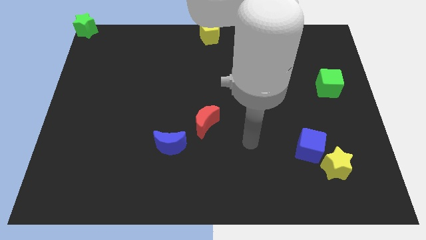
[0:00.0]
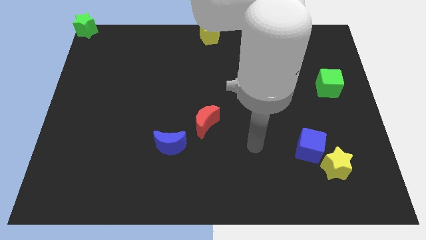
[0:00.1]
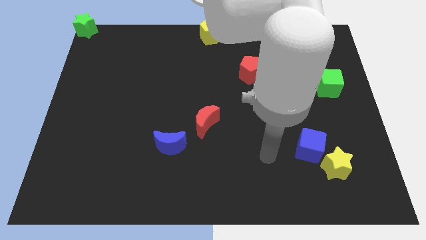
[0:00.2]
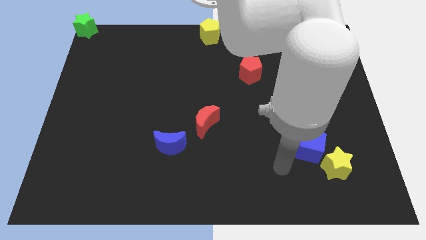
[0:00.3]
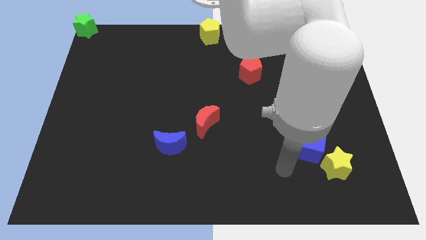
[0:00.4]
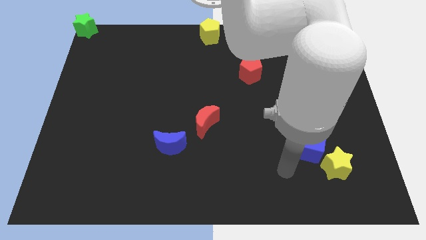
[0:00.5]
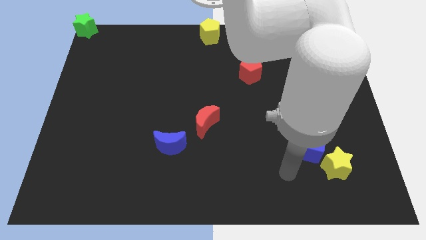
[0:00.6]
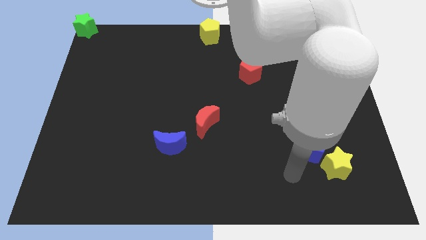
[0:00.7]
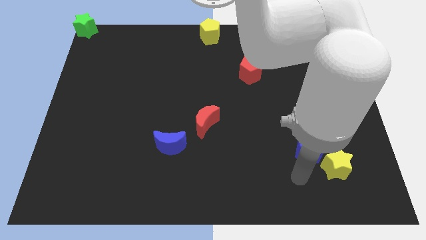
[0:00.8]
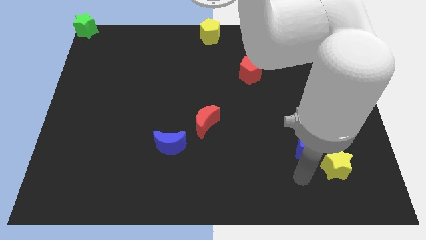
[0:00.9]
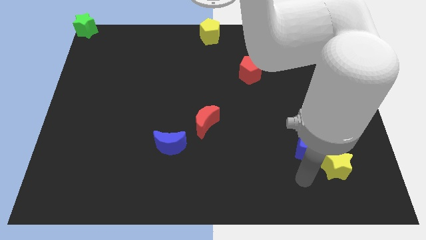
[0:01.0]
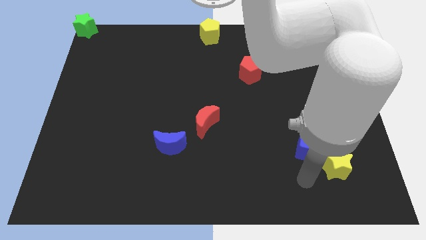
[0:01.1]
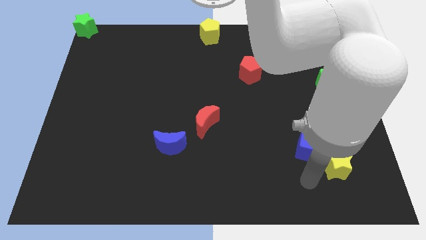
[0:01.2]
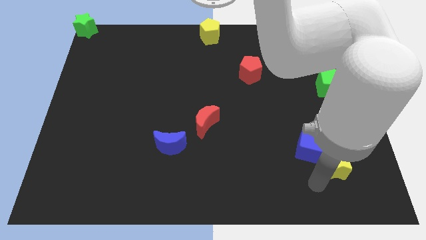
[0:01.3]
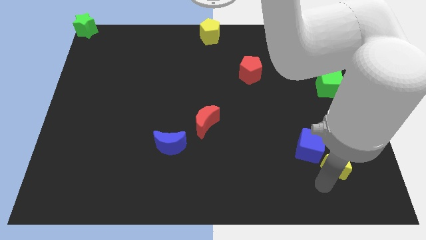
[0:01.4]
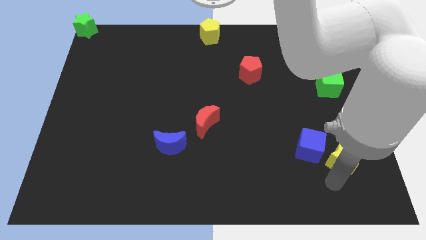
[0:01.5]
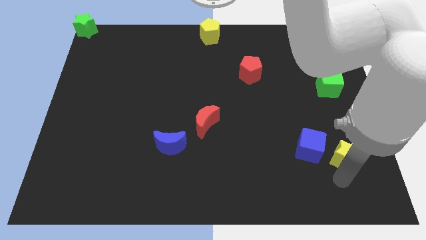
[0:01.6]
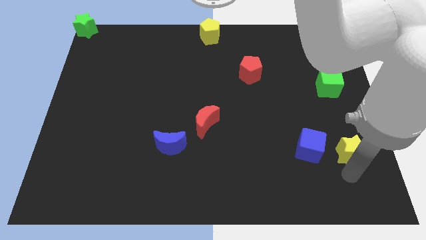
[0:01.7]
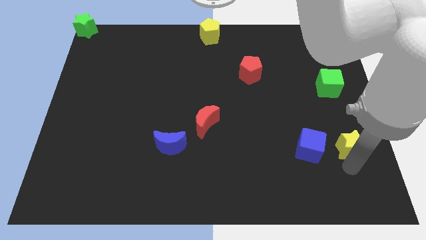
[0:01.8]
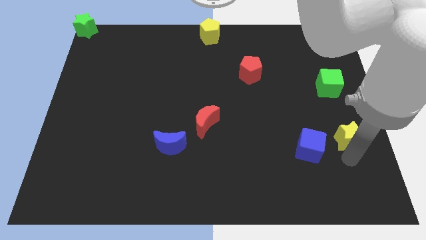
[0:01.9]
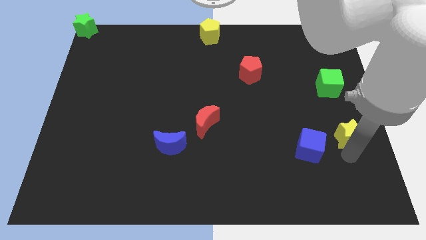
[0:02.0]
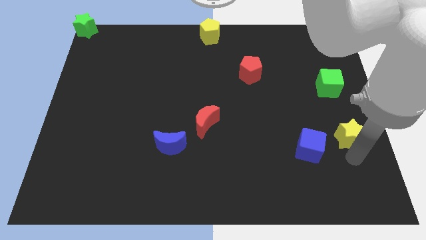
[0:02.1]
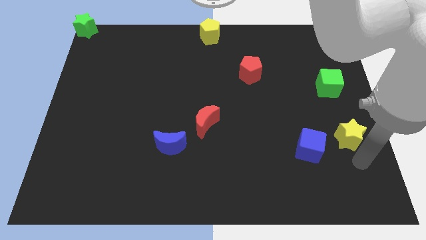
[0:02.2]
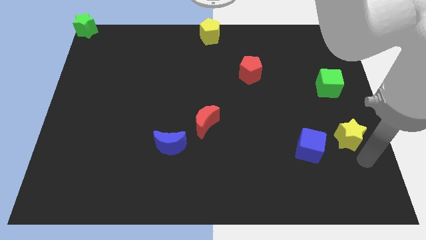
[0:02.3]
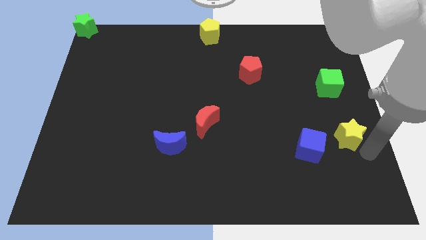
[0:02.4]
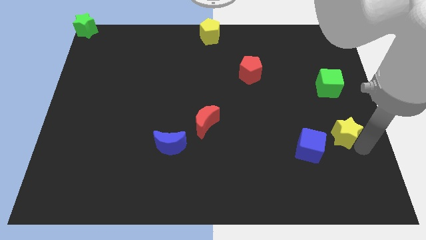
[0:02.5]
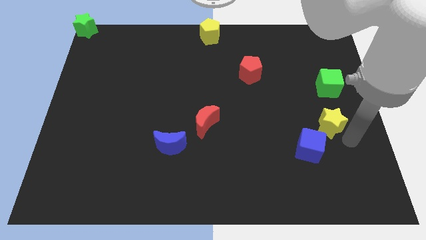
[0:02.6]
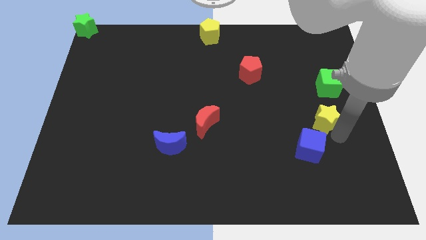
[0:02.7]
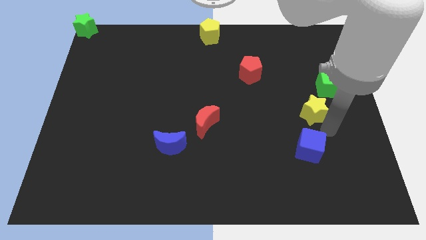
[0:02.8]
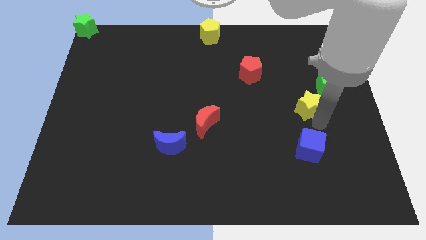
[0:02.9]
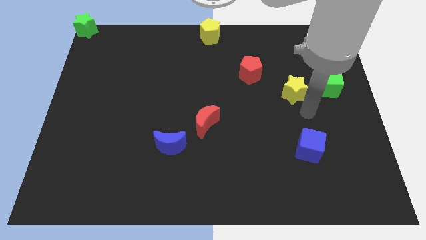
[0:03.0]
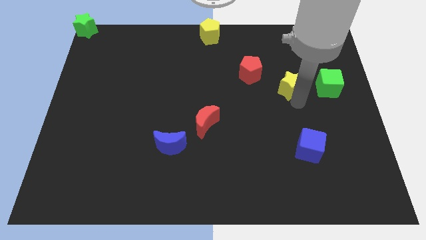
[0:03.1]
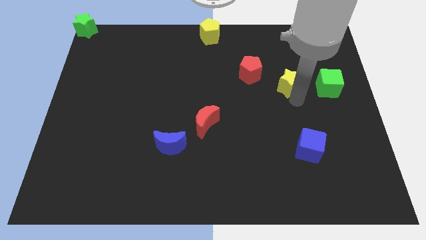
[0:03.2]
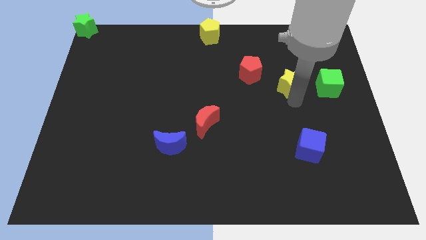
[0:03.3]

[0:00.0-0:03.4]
separate yellow star and blue cube

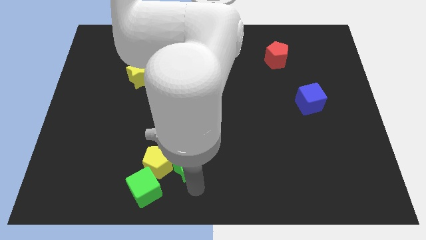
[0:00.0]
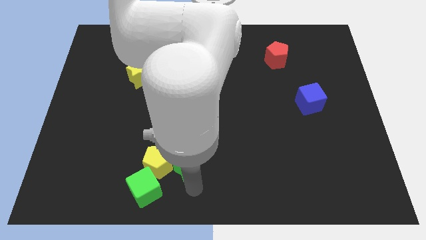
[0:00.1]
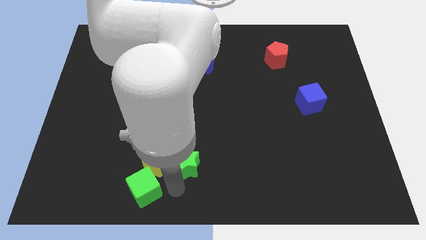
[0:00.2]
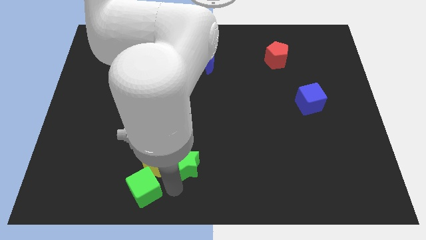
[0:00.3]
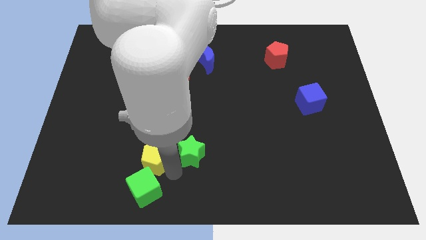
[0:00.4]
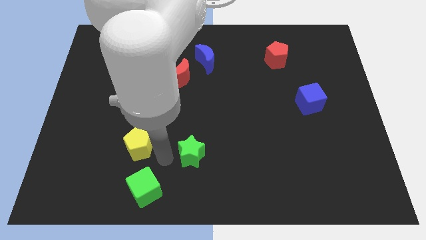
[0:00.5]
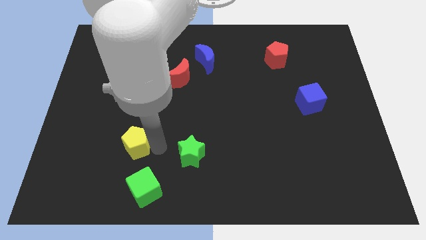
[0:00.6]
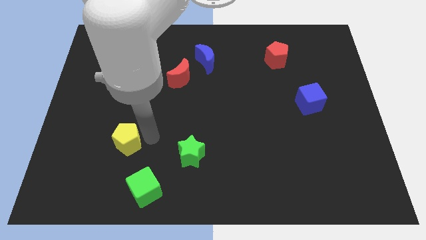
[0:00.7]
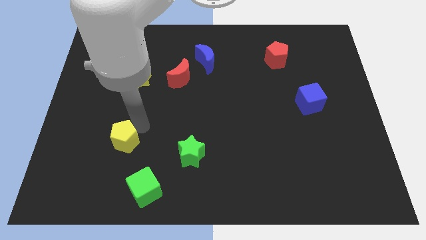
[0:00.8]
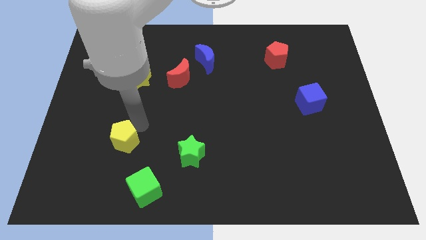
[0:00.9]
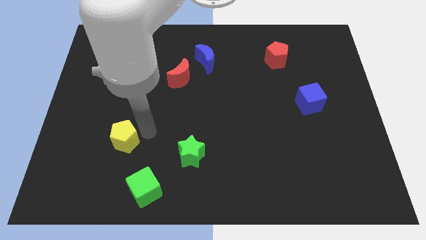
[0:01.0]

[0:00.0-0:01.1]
separate the yellow pentagon away from the green blocks

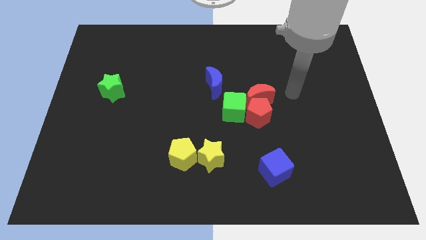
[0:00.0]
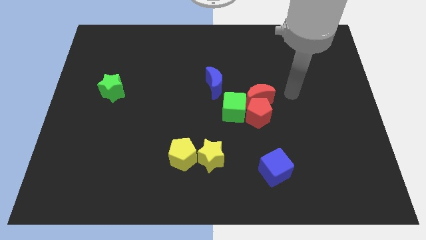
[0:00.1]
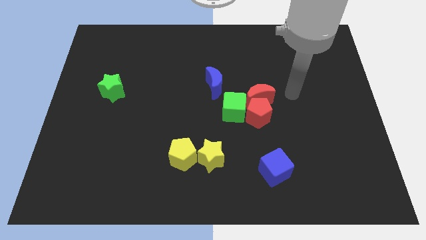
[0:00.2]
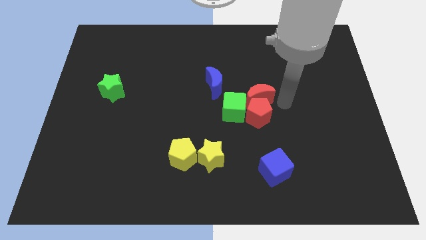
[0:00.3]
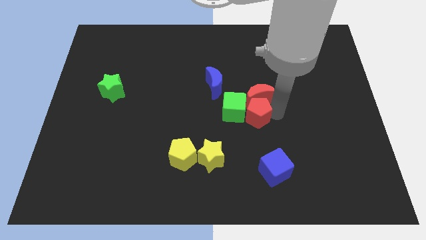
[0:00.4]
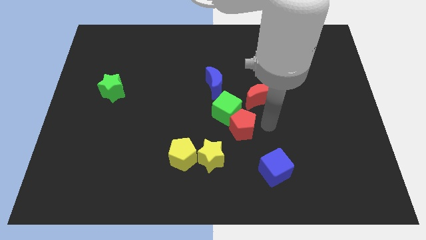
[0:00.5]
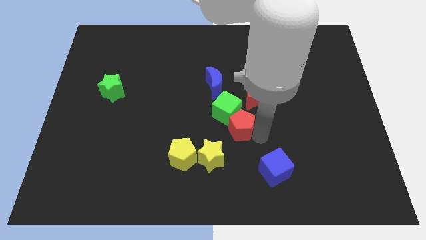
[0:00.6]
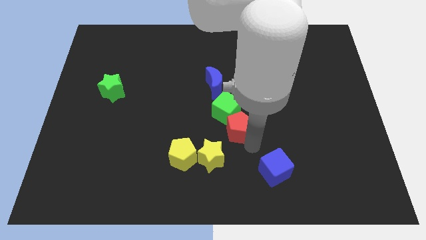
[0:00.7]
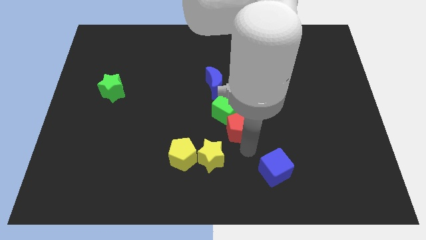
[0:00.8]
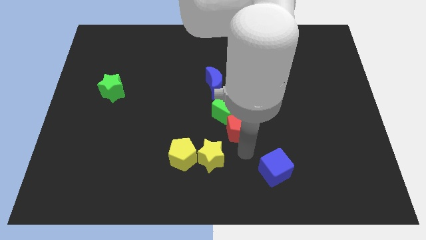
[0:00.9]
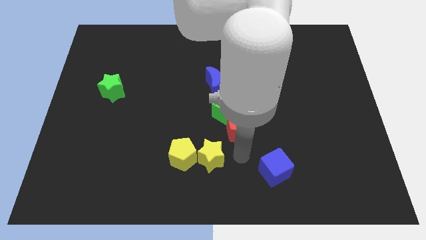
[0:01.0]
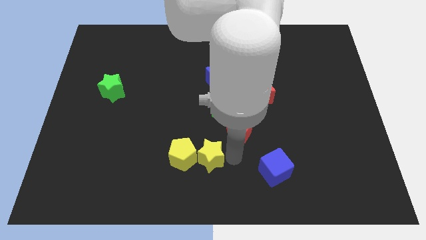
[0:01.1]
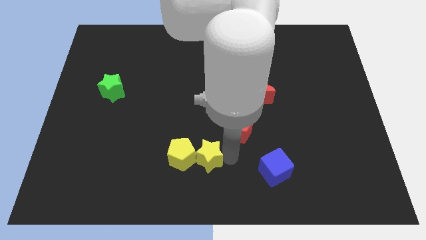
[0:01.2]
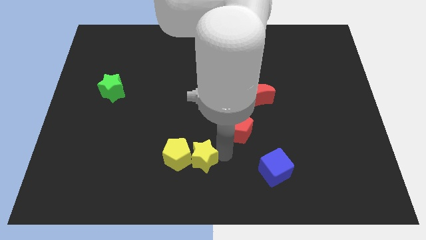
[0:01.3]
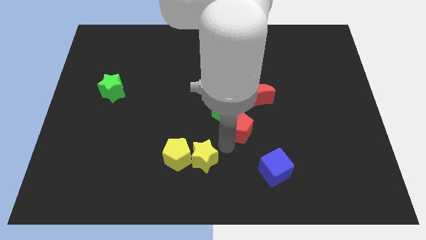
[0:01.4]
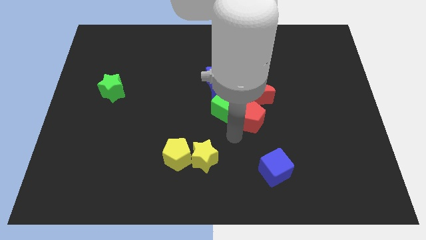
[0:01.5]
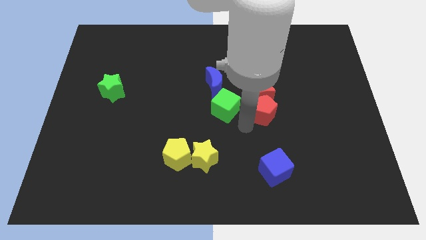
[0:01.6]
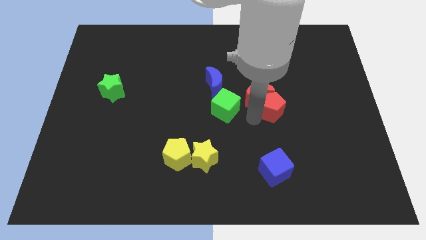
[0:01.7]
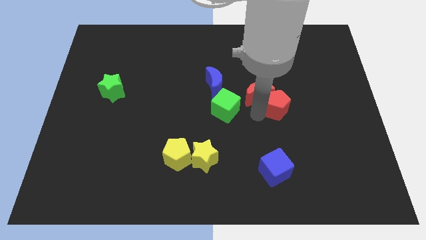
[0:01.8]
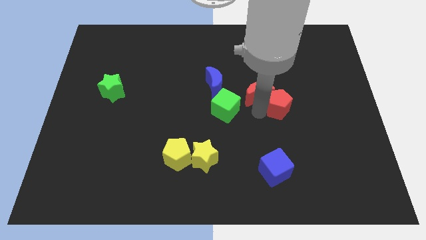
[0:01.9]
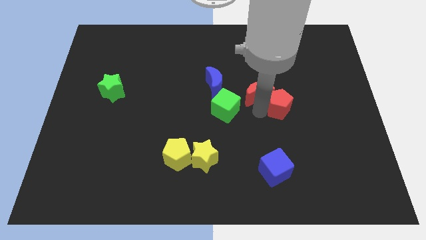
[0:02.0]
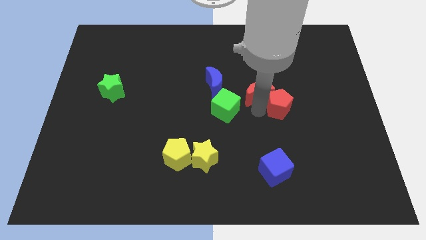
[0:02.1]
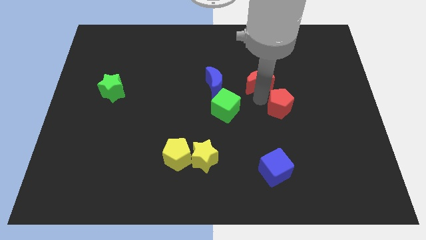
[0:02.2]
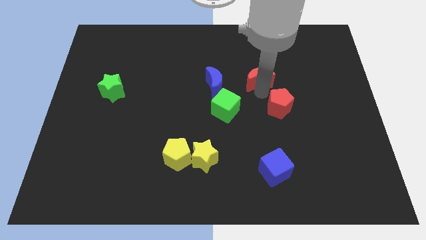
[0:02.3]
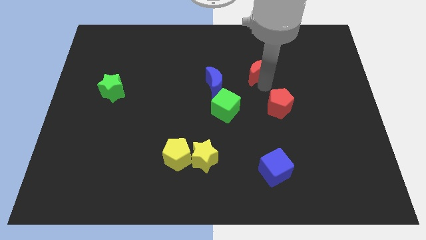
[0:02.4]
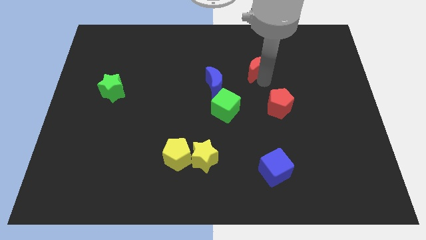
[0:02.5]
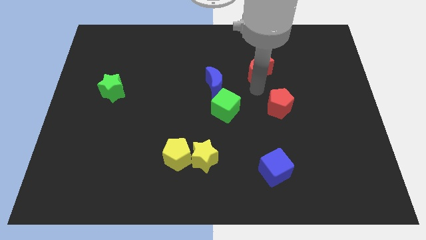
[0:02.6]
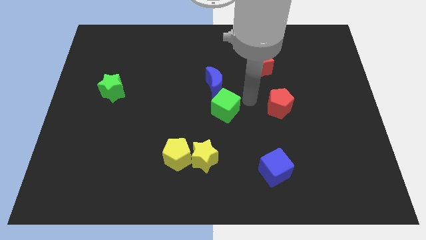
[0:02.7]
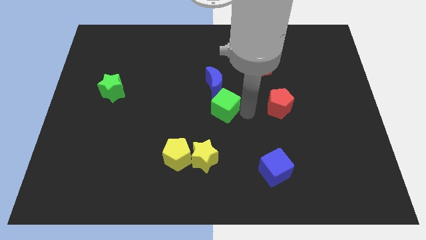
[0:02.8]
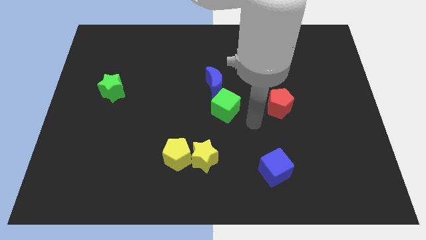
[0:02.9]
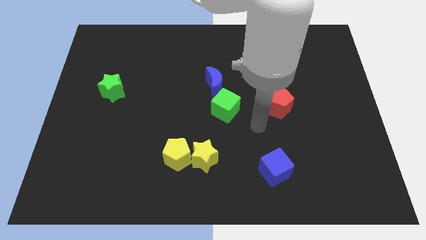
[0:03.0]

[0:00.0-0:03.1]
separate red blocks from green cube

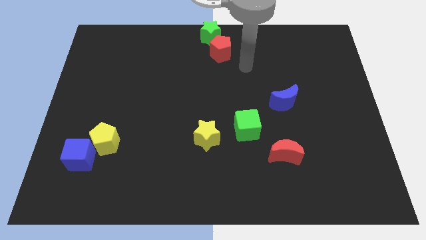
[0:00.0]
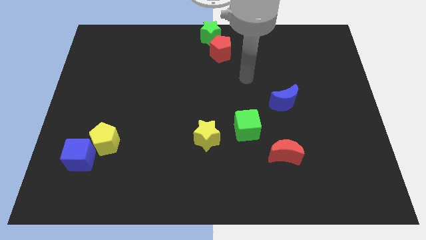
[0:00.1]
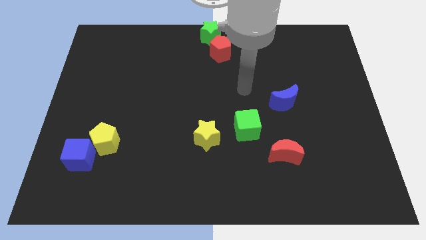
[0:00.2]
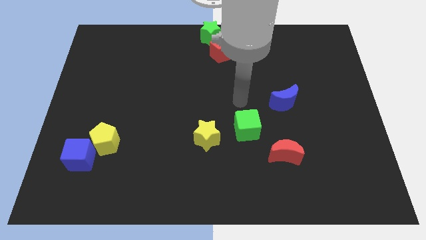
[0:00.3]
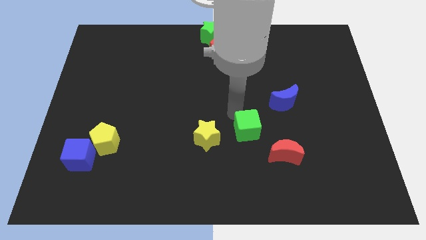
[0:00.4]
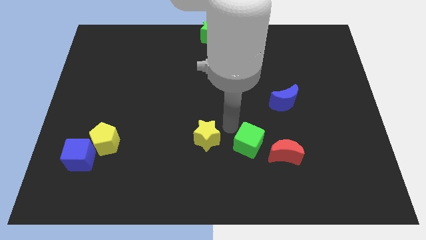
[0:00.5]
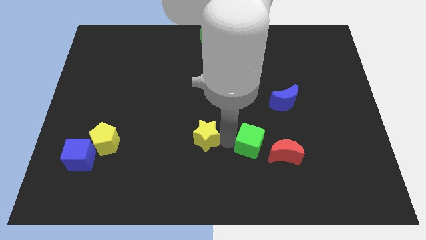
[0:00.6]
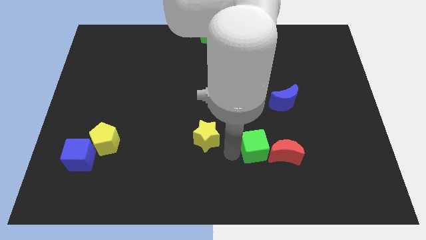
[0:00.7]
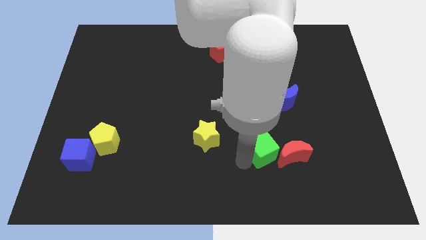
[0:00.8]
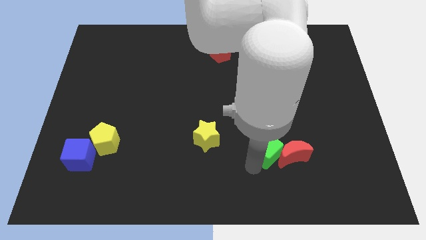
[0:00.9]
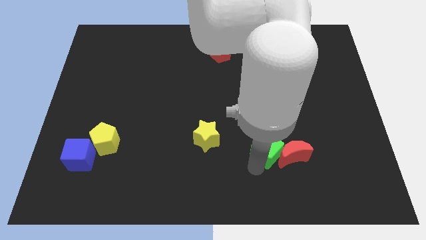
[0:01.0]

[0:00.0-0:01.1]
move your arm bottom of the green cube

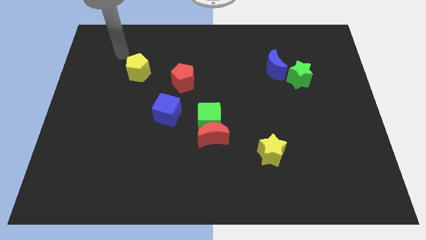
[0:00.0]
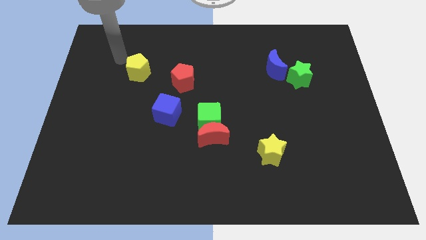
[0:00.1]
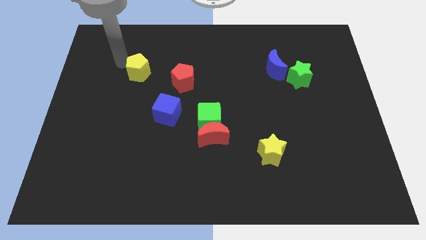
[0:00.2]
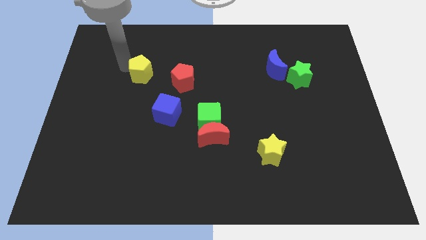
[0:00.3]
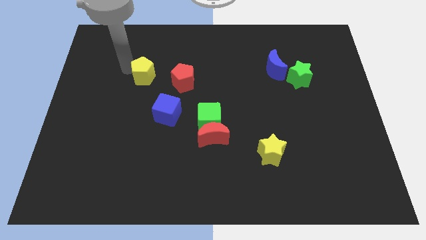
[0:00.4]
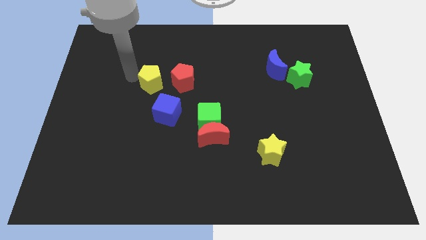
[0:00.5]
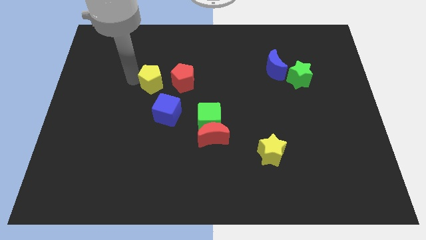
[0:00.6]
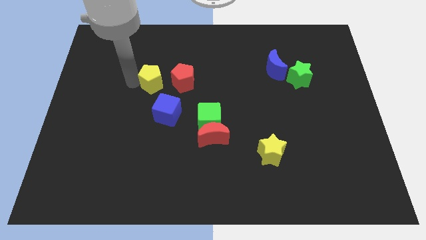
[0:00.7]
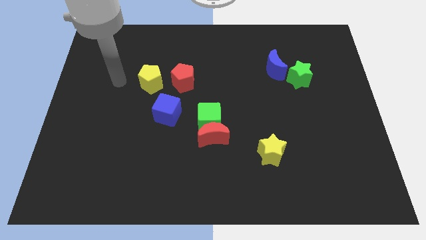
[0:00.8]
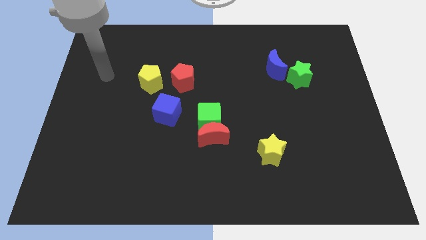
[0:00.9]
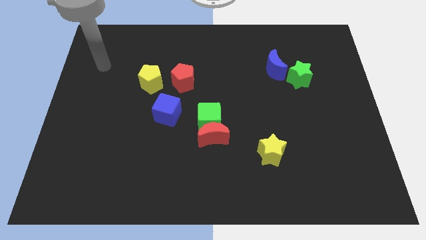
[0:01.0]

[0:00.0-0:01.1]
slide yellow pentagon to the left of red pentagon
